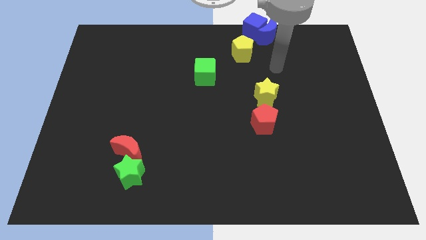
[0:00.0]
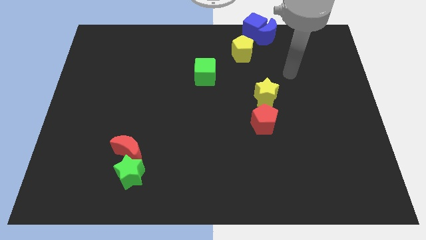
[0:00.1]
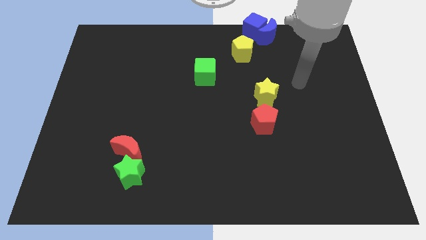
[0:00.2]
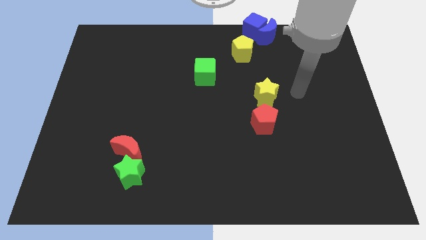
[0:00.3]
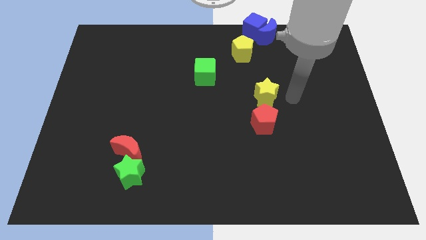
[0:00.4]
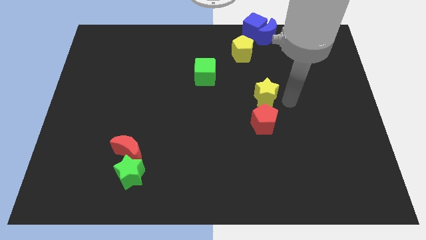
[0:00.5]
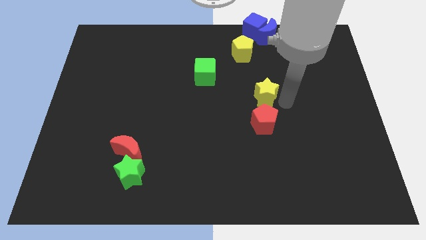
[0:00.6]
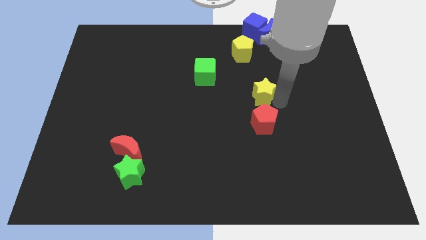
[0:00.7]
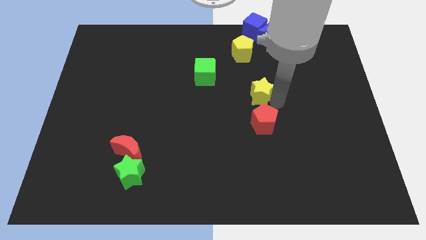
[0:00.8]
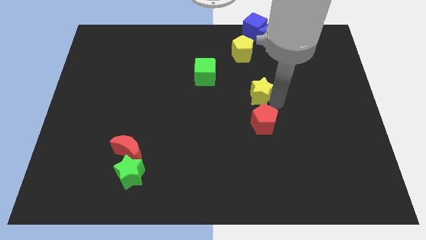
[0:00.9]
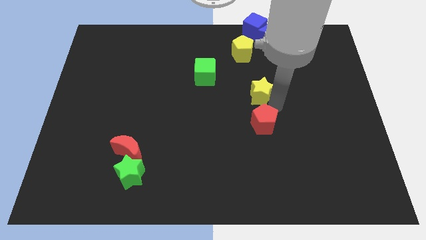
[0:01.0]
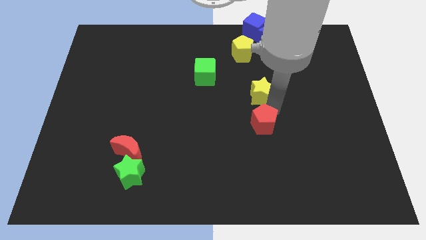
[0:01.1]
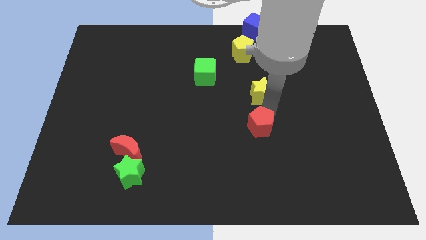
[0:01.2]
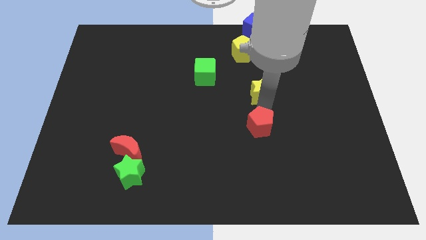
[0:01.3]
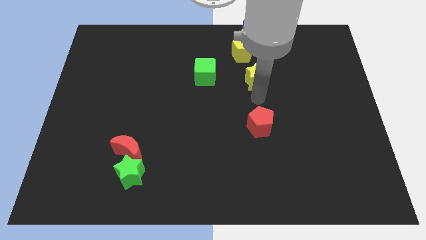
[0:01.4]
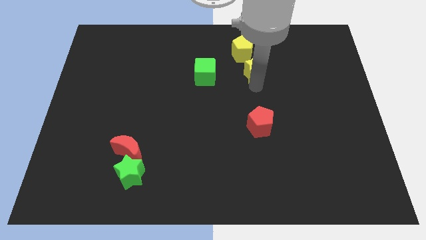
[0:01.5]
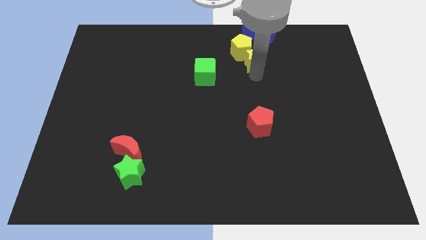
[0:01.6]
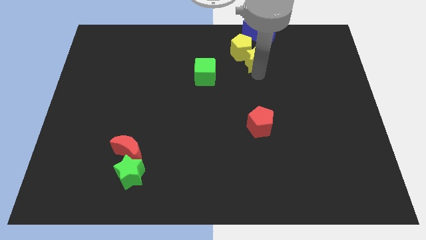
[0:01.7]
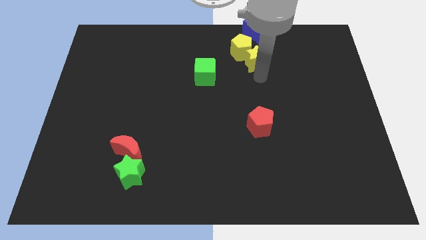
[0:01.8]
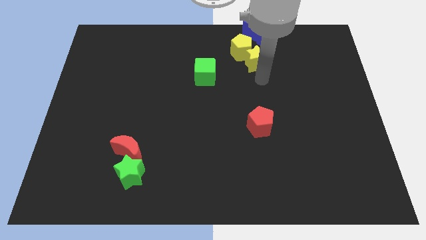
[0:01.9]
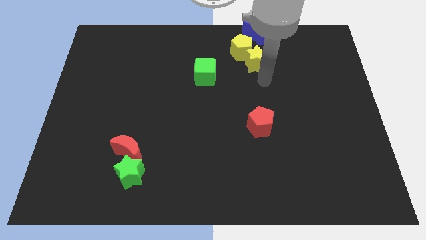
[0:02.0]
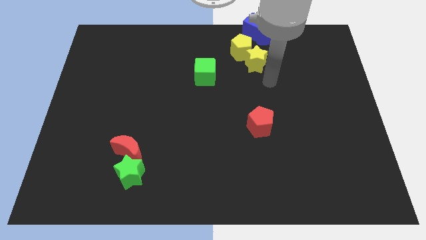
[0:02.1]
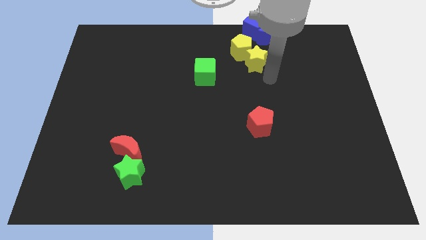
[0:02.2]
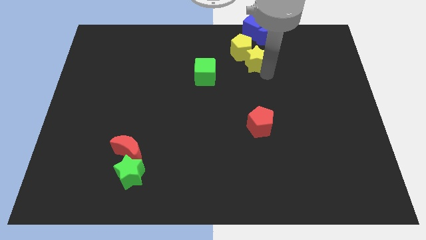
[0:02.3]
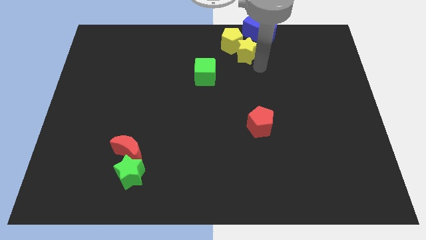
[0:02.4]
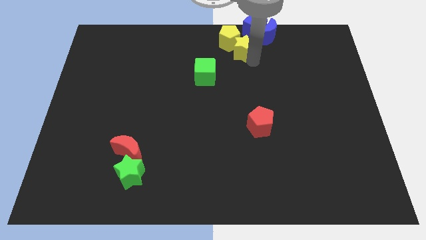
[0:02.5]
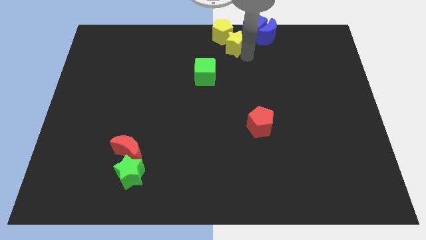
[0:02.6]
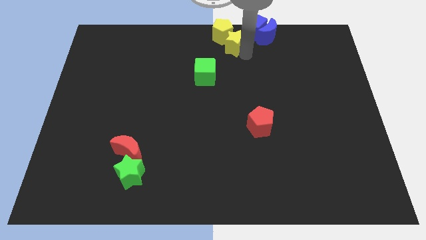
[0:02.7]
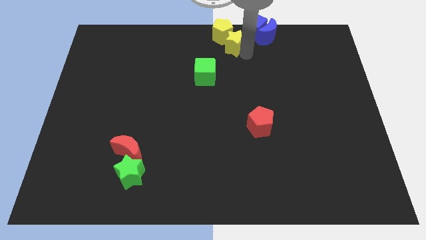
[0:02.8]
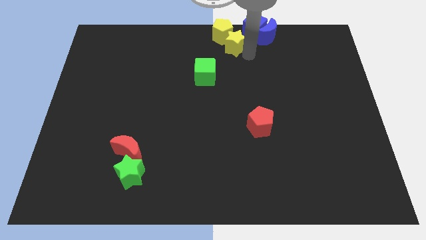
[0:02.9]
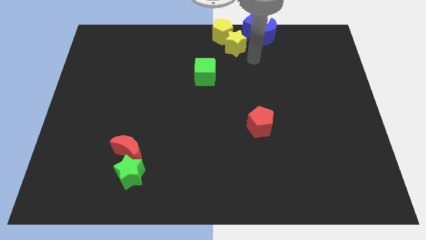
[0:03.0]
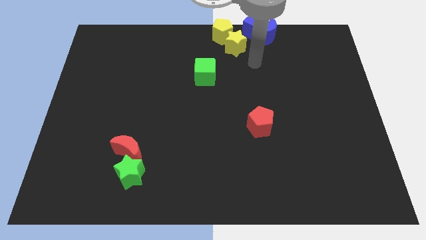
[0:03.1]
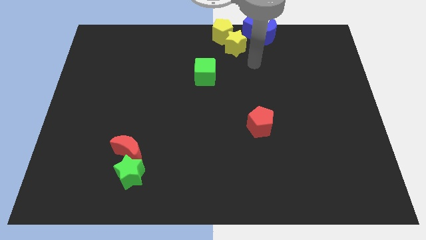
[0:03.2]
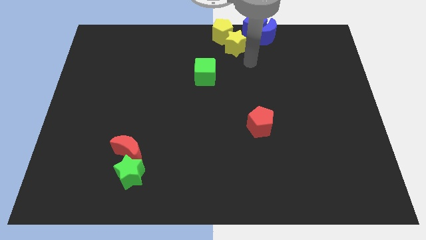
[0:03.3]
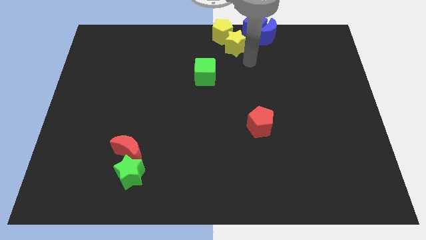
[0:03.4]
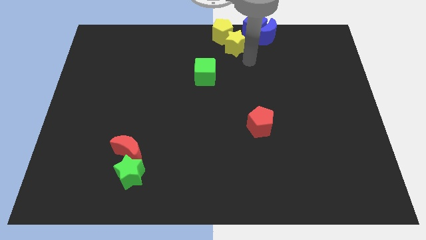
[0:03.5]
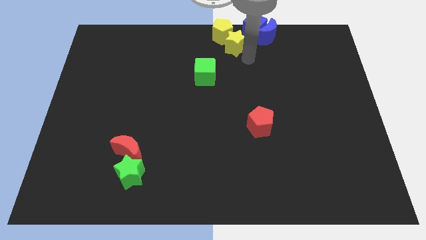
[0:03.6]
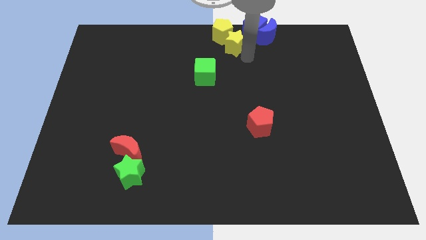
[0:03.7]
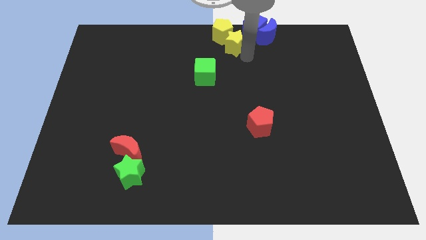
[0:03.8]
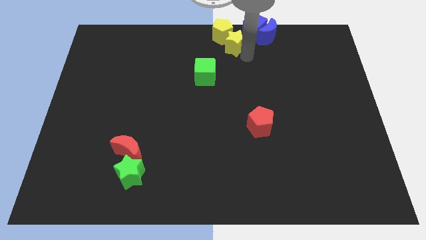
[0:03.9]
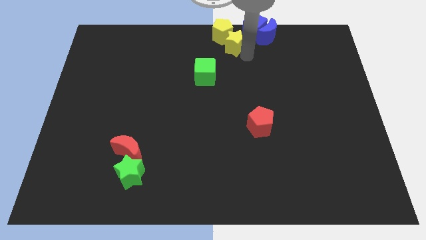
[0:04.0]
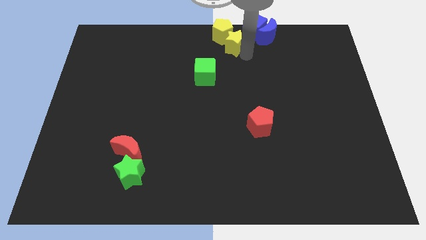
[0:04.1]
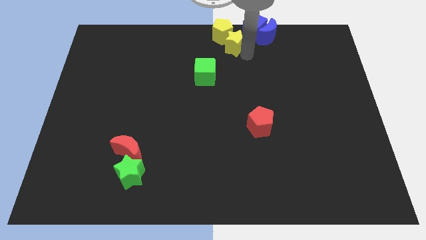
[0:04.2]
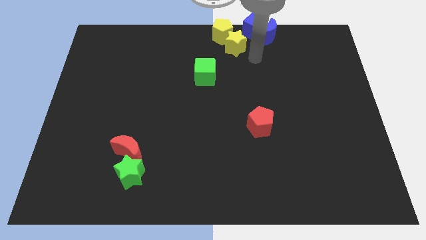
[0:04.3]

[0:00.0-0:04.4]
push the yellow star into the yellow pentagon to the top center of the board

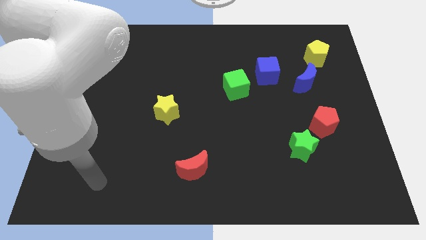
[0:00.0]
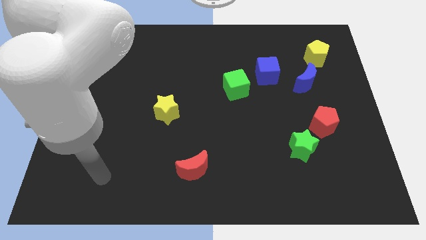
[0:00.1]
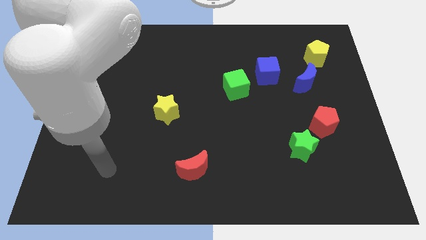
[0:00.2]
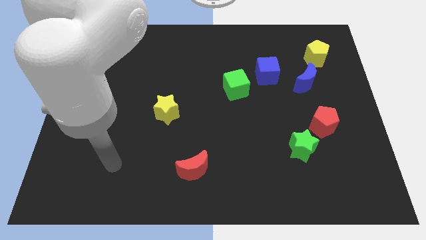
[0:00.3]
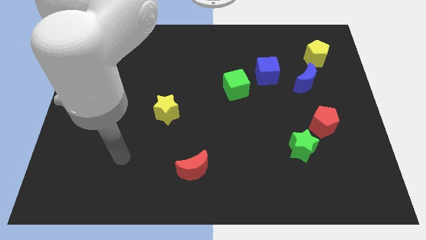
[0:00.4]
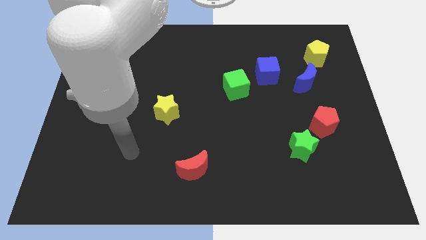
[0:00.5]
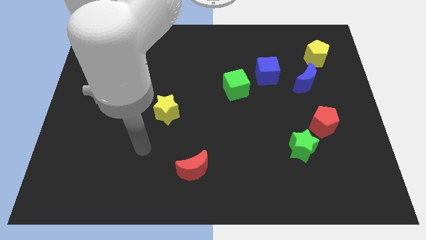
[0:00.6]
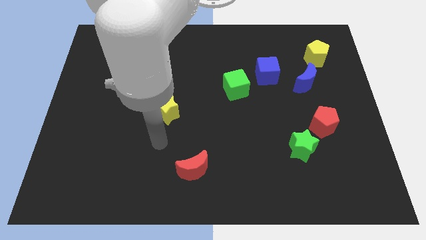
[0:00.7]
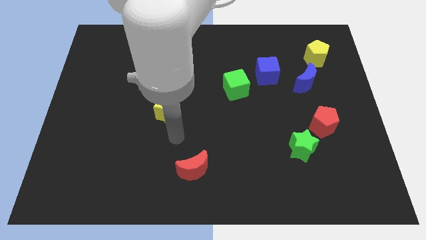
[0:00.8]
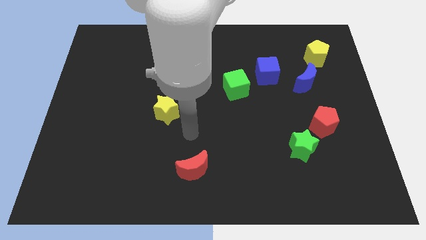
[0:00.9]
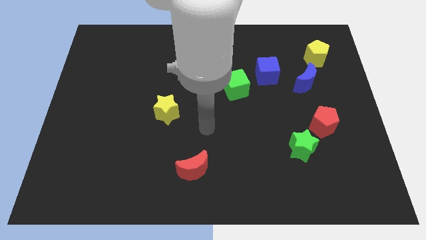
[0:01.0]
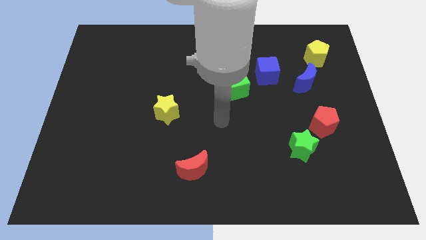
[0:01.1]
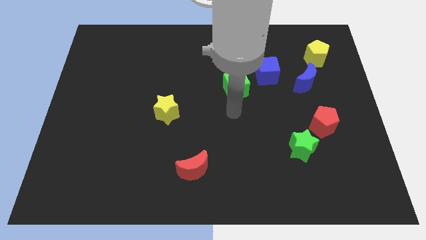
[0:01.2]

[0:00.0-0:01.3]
move your arm to the center of the board

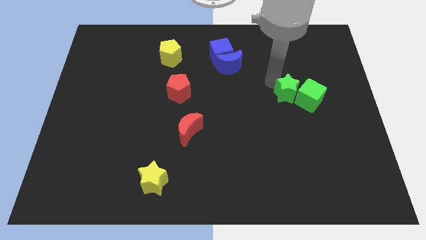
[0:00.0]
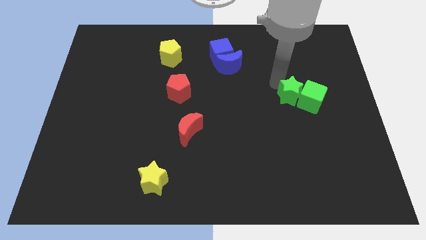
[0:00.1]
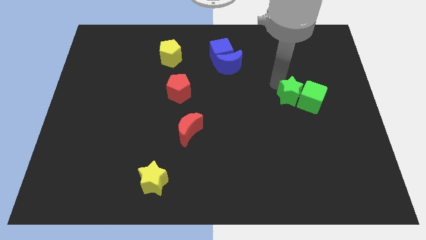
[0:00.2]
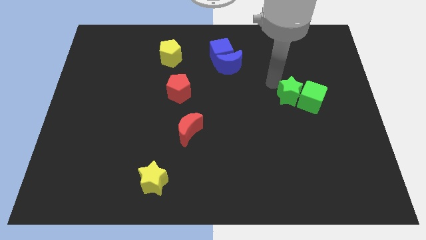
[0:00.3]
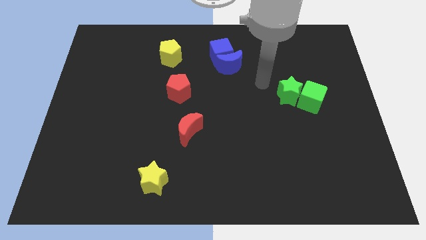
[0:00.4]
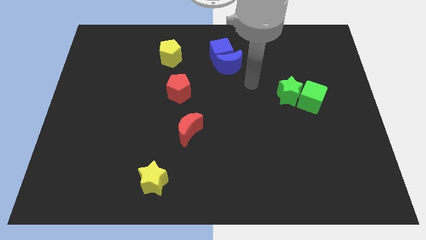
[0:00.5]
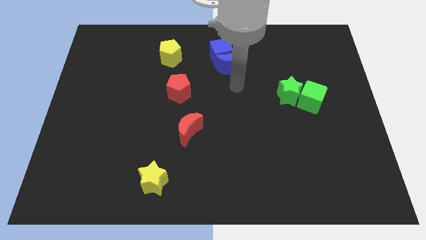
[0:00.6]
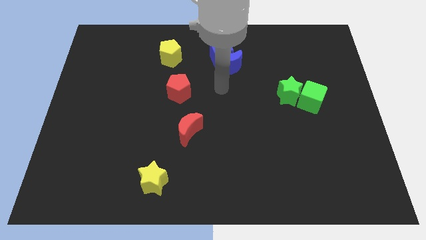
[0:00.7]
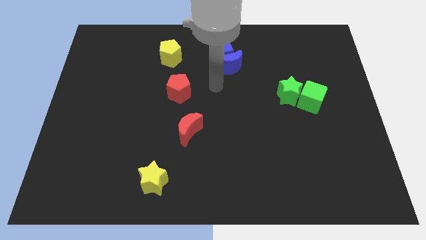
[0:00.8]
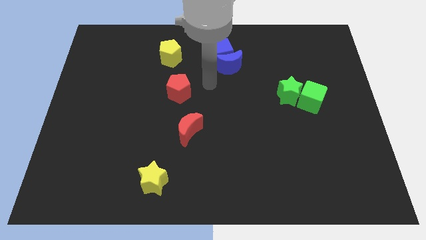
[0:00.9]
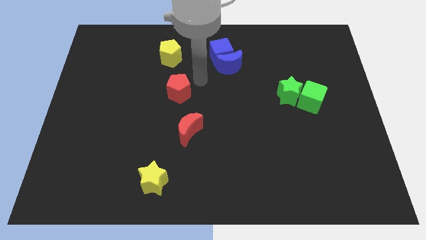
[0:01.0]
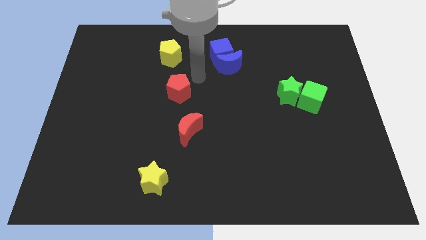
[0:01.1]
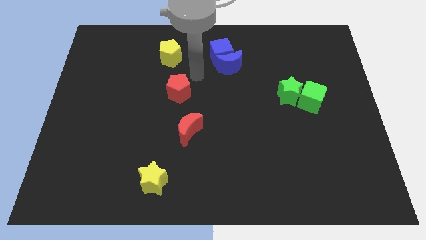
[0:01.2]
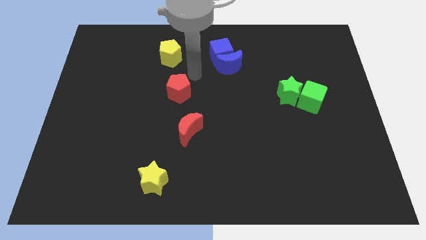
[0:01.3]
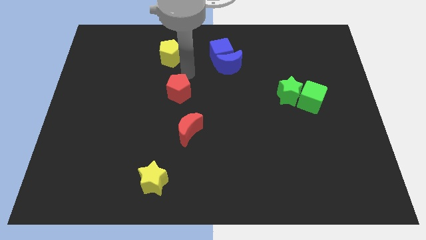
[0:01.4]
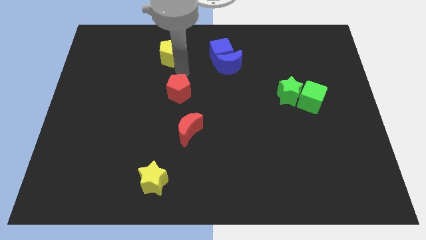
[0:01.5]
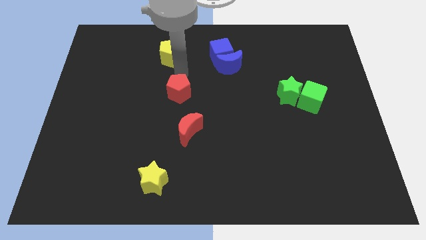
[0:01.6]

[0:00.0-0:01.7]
move the arm to the top of the red pentagon

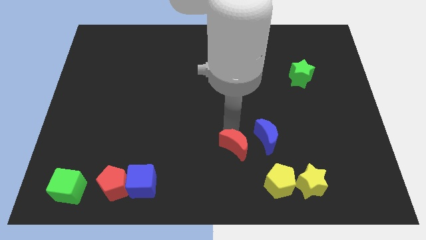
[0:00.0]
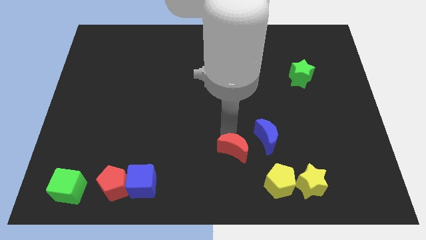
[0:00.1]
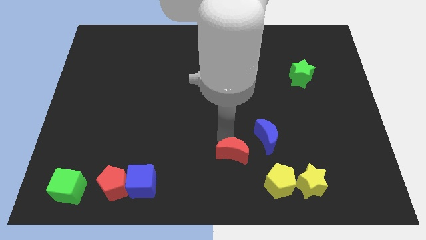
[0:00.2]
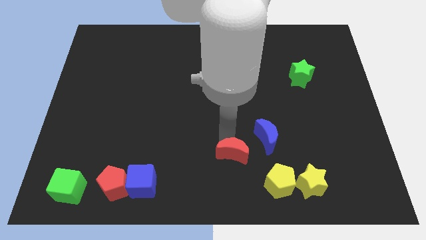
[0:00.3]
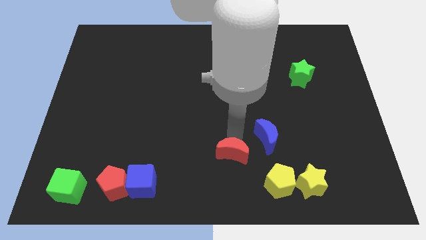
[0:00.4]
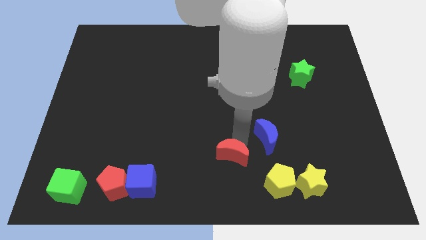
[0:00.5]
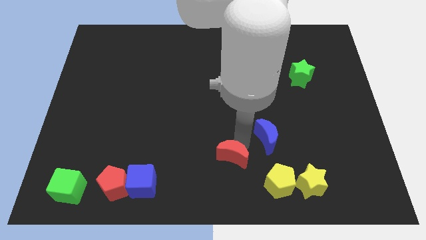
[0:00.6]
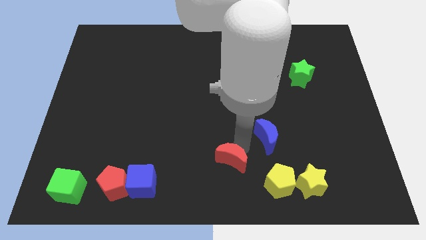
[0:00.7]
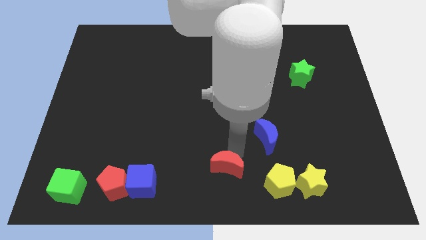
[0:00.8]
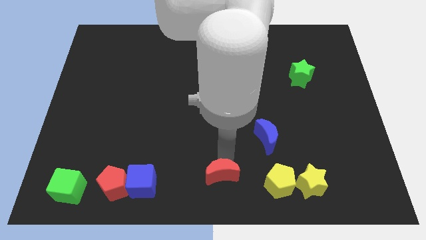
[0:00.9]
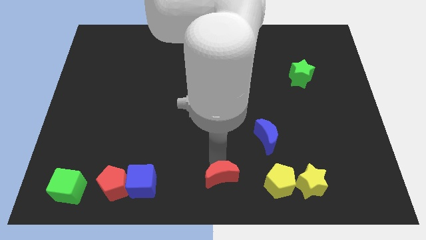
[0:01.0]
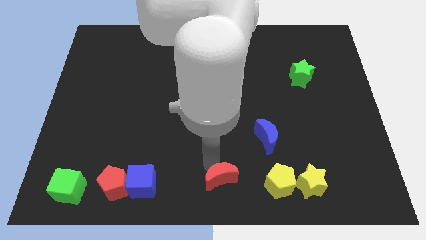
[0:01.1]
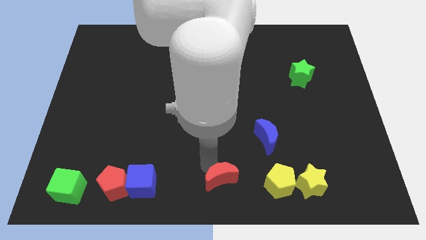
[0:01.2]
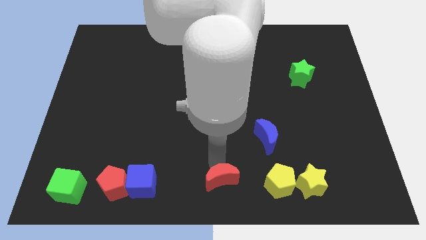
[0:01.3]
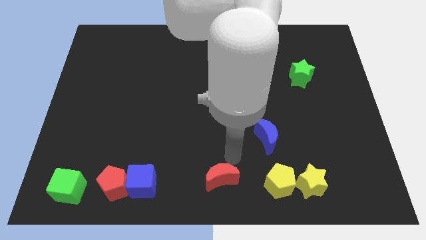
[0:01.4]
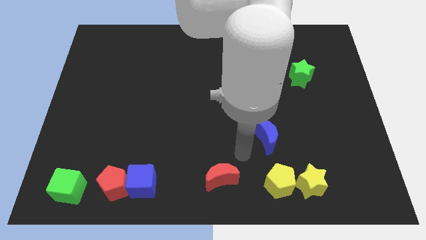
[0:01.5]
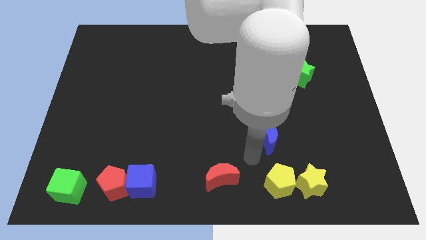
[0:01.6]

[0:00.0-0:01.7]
move the red pentagon to the bottom side of the board
